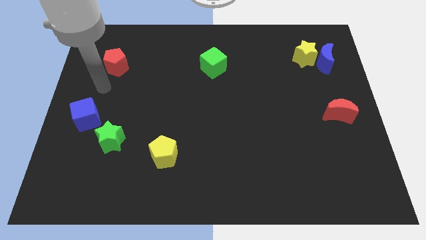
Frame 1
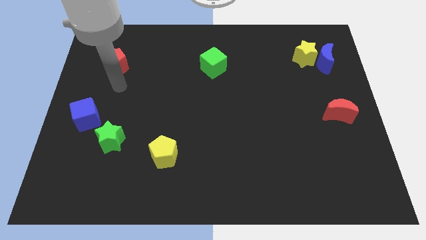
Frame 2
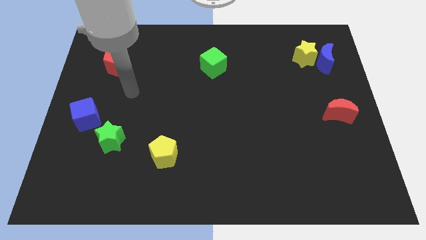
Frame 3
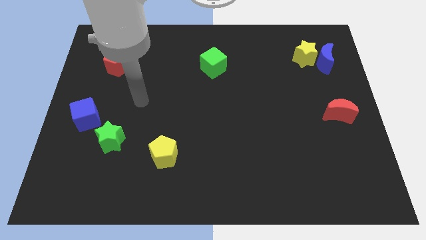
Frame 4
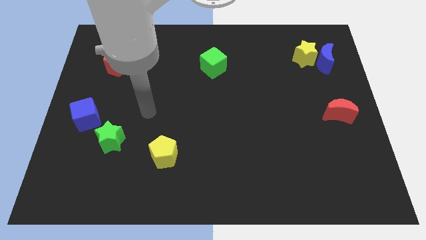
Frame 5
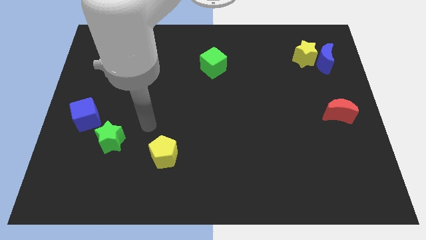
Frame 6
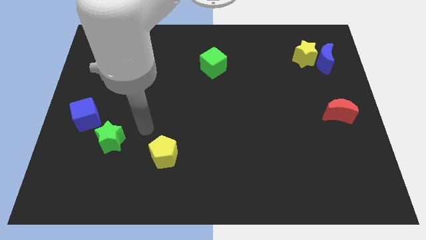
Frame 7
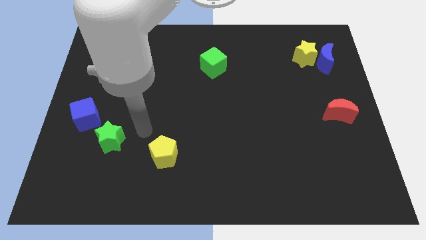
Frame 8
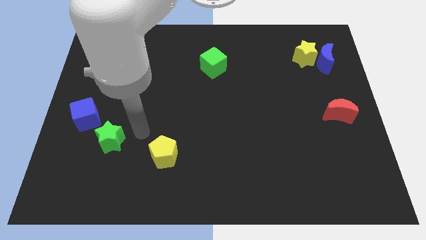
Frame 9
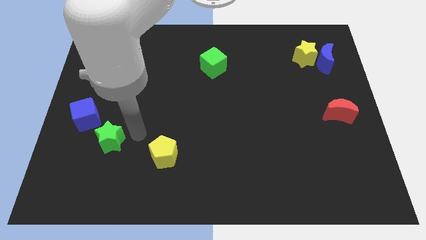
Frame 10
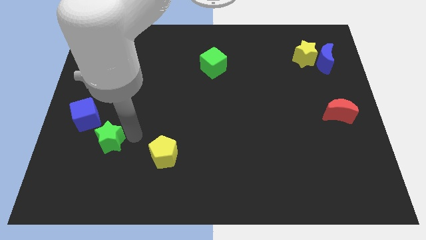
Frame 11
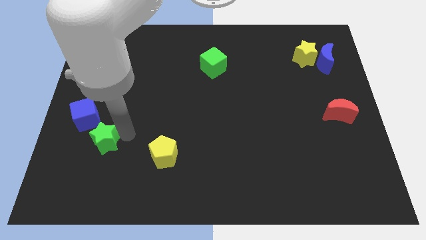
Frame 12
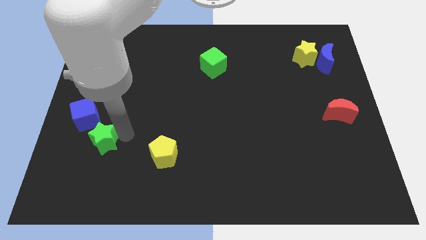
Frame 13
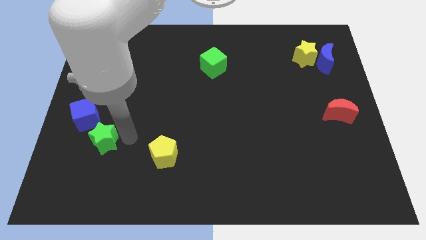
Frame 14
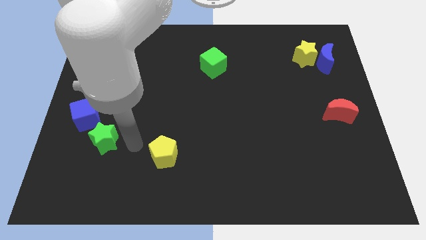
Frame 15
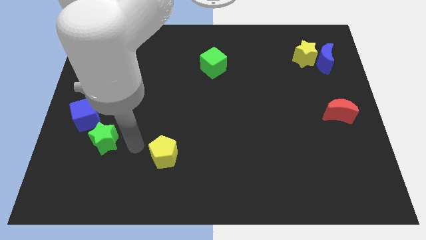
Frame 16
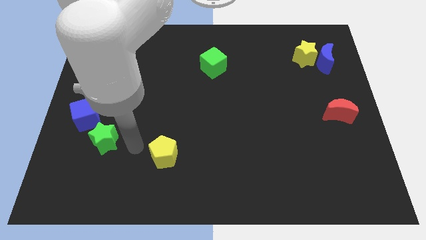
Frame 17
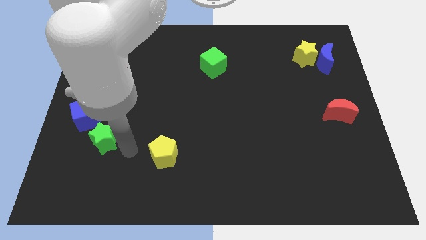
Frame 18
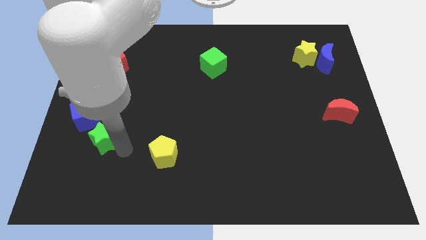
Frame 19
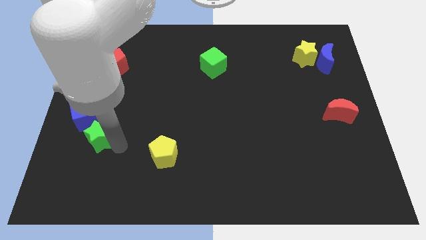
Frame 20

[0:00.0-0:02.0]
slightly push the green star towards the blue cube

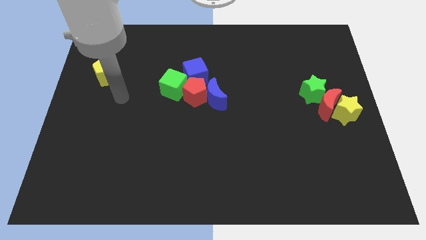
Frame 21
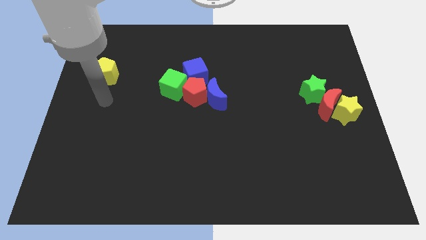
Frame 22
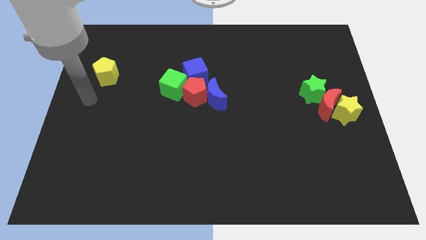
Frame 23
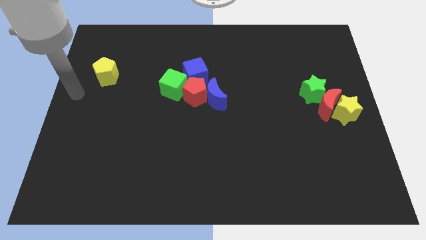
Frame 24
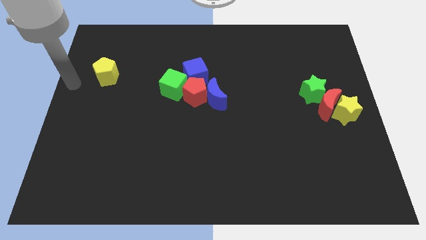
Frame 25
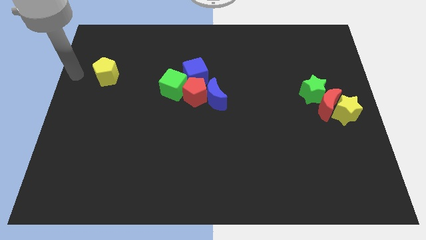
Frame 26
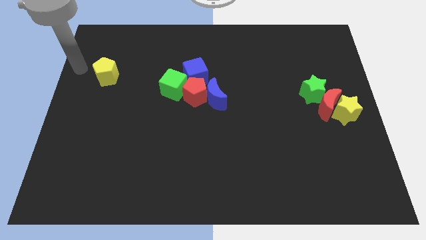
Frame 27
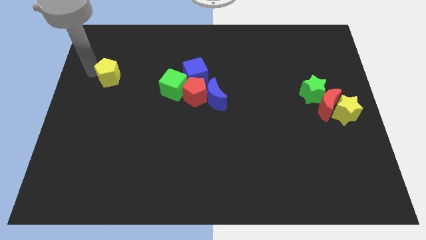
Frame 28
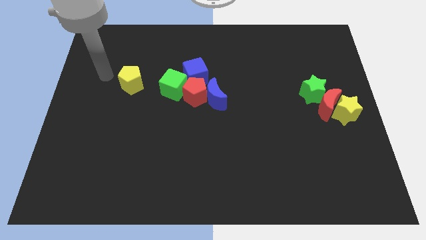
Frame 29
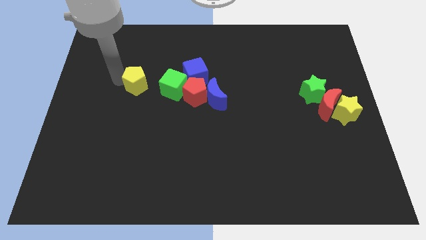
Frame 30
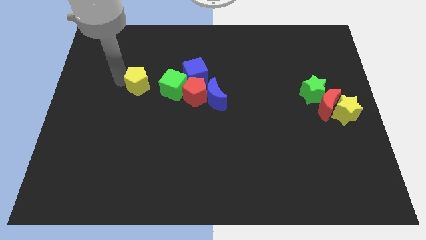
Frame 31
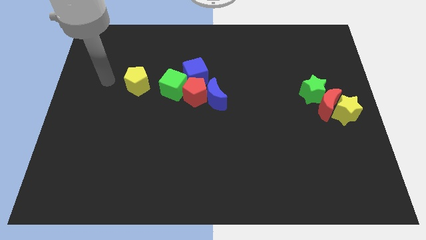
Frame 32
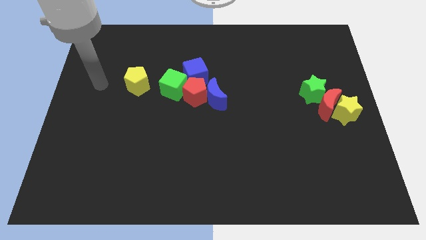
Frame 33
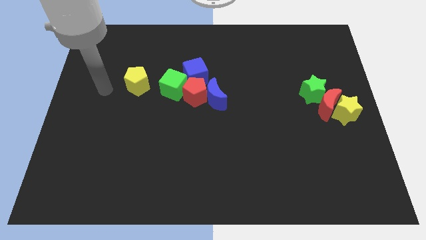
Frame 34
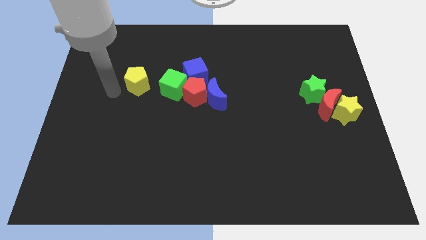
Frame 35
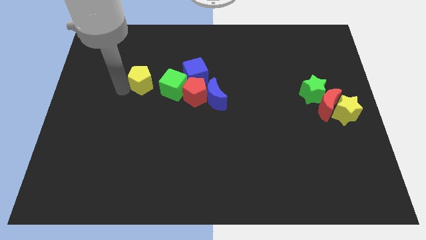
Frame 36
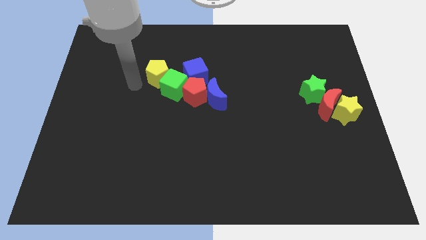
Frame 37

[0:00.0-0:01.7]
push yellow pentagon near green cube

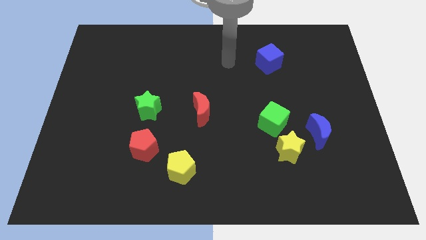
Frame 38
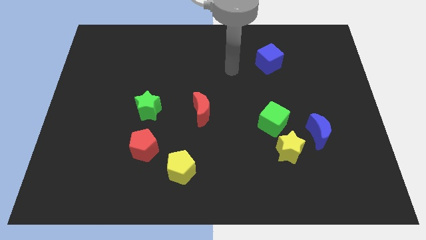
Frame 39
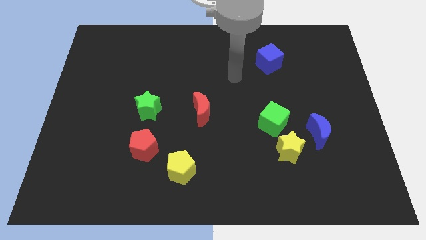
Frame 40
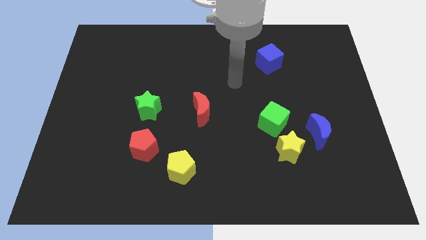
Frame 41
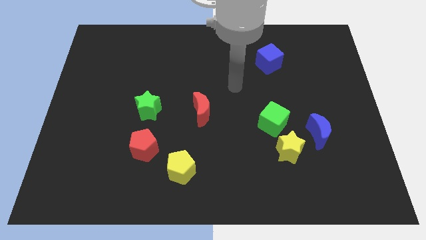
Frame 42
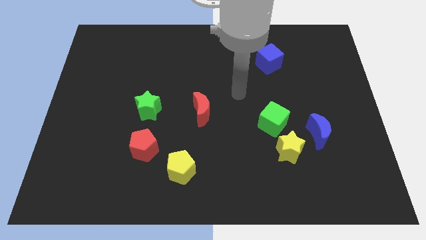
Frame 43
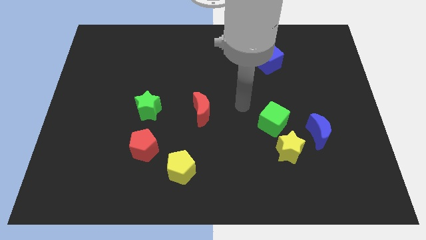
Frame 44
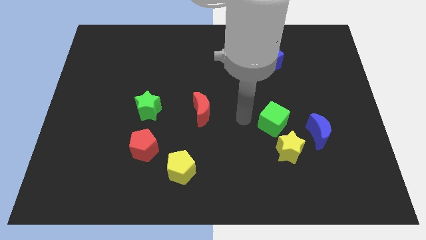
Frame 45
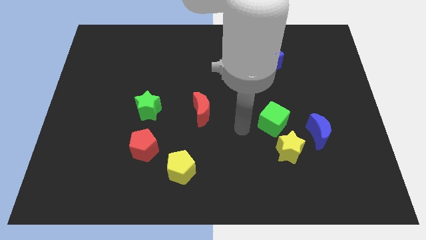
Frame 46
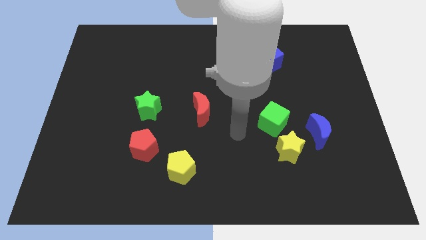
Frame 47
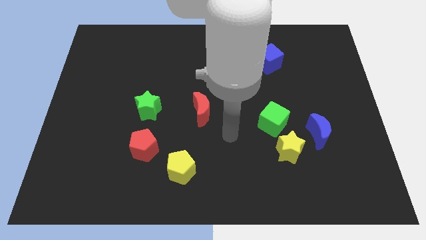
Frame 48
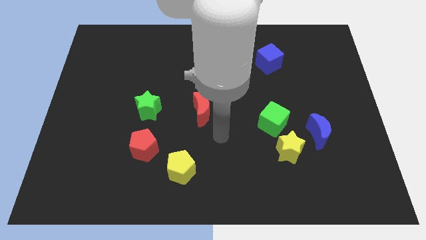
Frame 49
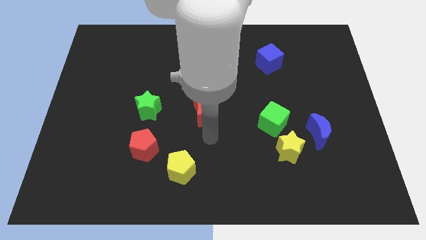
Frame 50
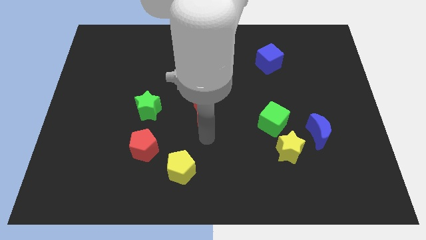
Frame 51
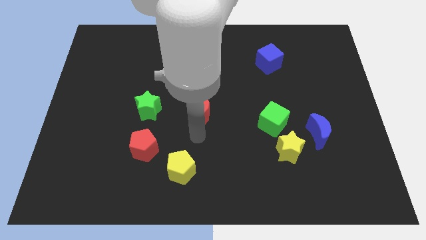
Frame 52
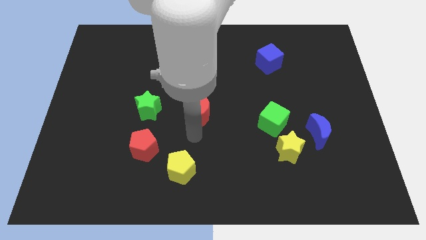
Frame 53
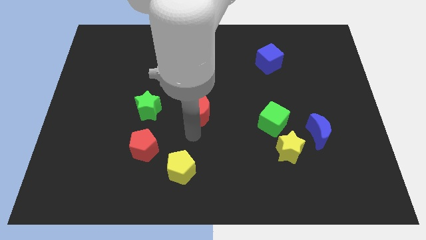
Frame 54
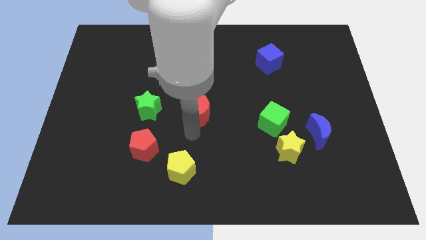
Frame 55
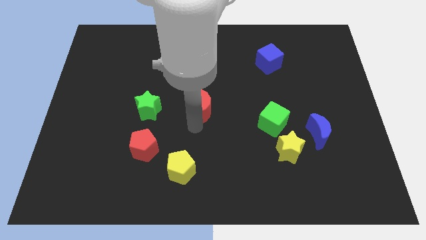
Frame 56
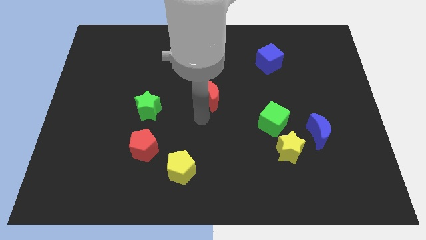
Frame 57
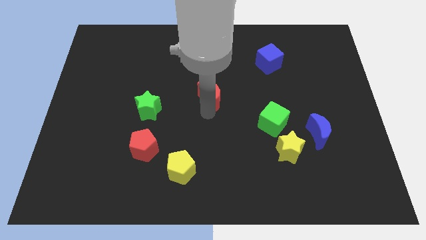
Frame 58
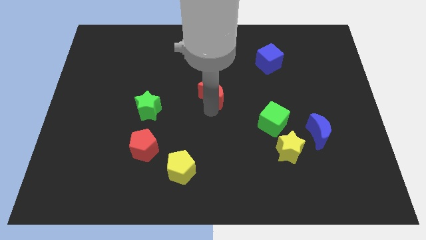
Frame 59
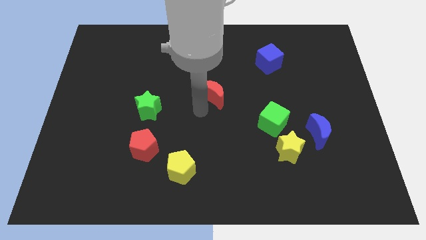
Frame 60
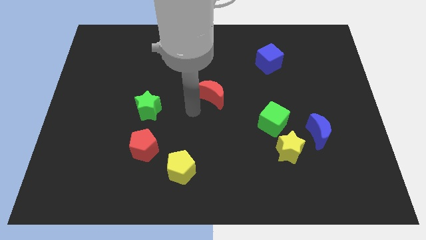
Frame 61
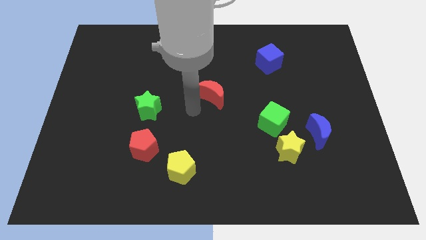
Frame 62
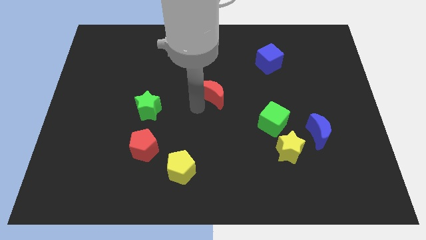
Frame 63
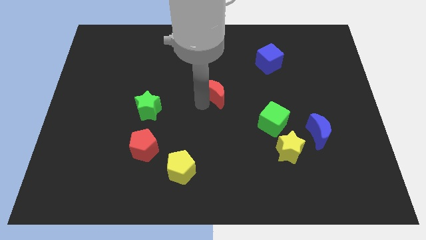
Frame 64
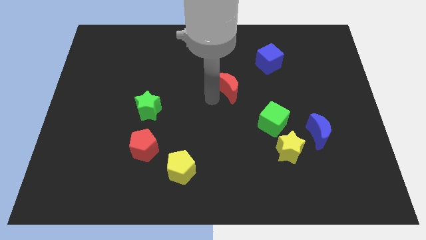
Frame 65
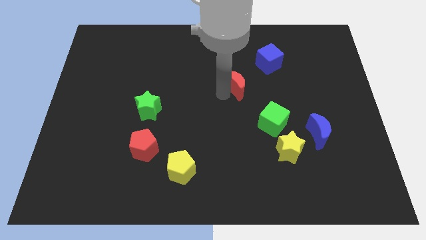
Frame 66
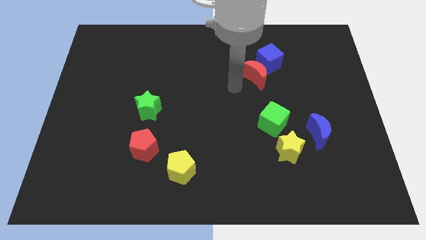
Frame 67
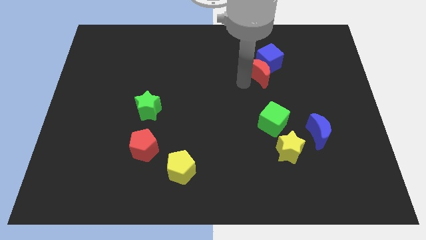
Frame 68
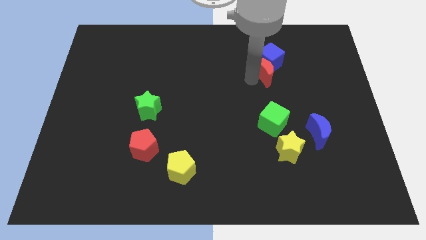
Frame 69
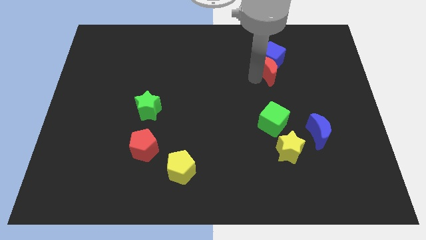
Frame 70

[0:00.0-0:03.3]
push the red moon into the blue moon

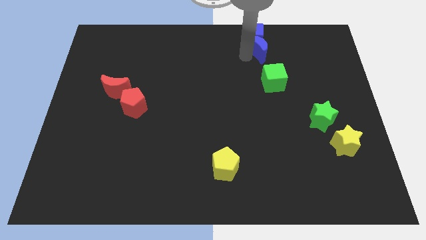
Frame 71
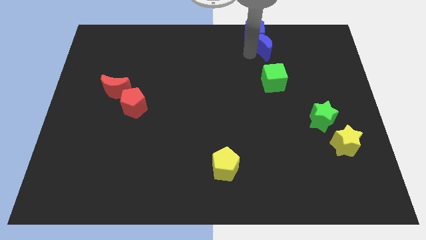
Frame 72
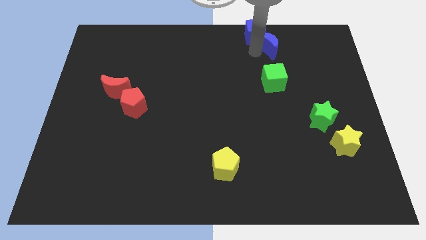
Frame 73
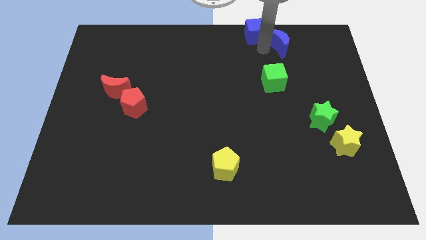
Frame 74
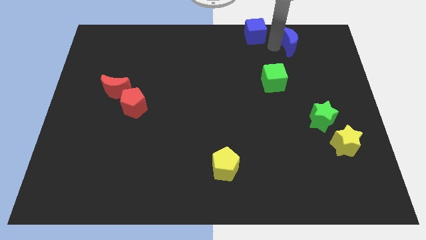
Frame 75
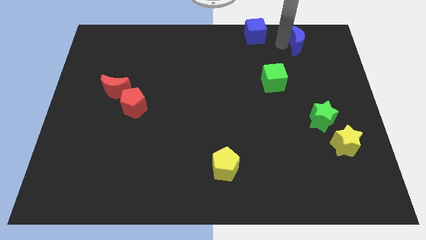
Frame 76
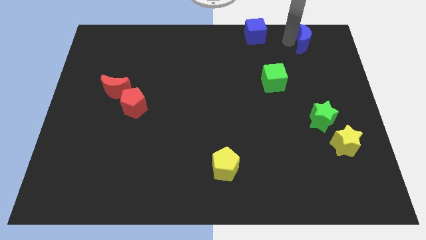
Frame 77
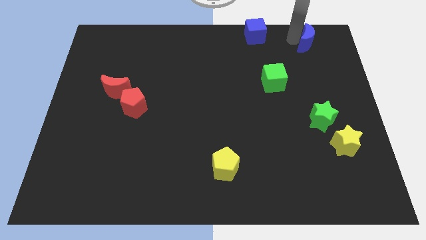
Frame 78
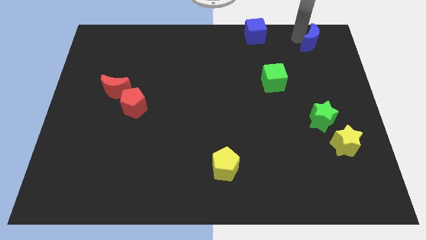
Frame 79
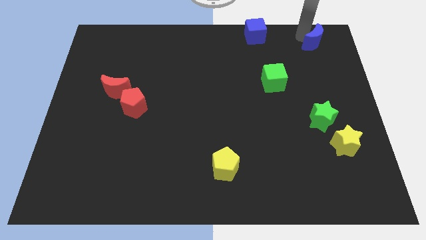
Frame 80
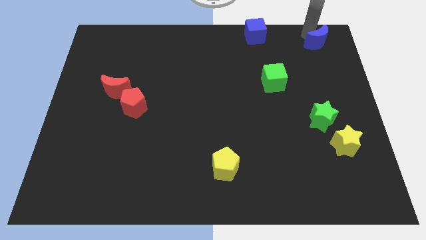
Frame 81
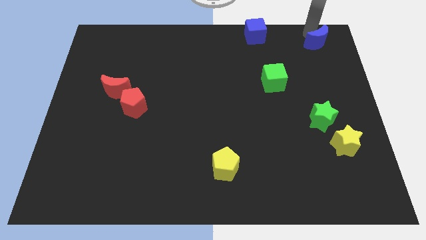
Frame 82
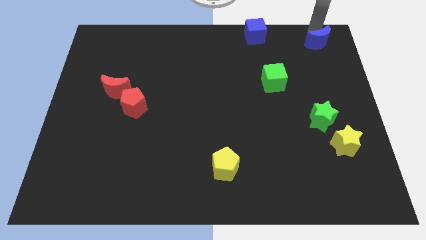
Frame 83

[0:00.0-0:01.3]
separate the blue crescent from the blue cube

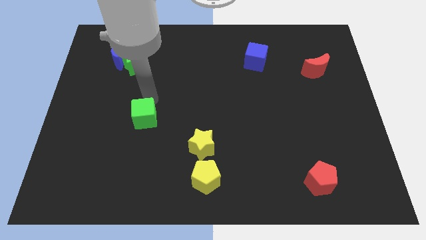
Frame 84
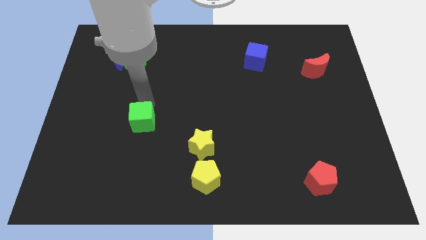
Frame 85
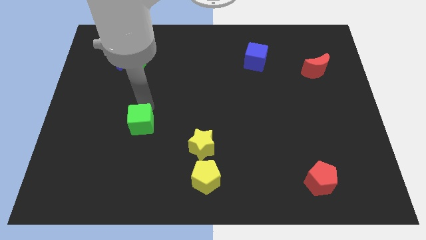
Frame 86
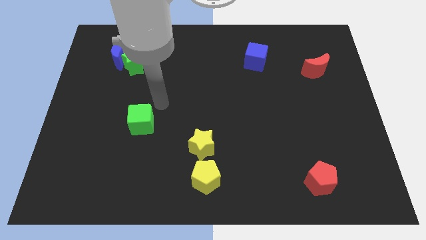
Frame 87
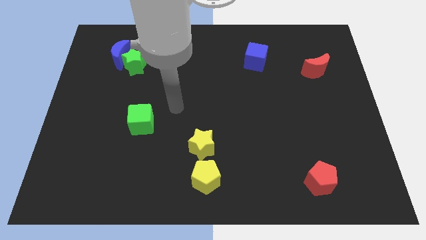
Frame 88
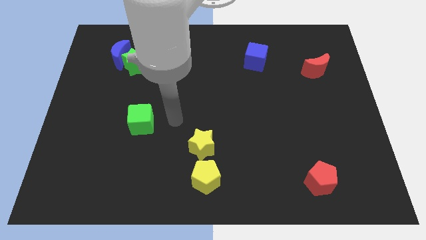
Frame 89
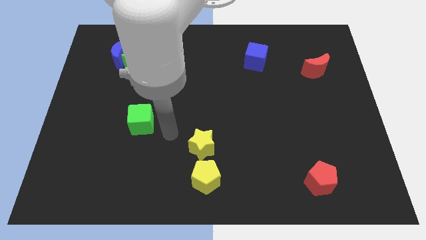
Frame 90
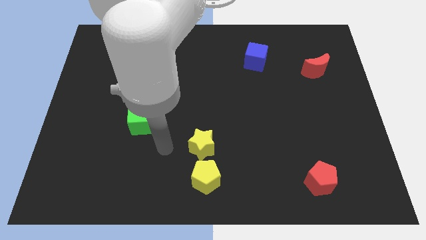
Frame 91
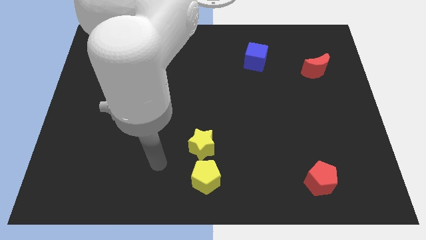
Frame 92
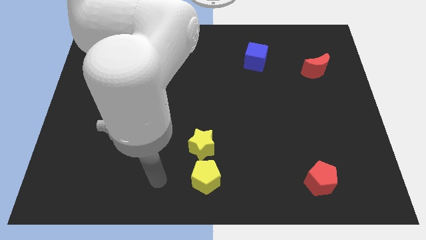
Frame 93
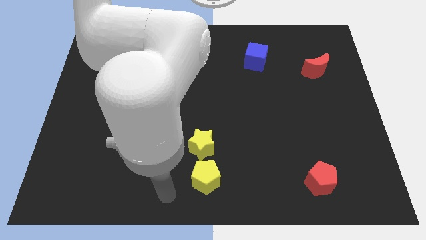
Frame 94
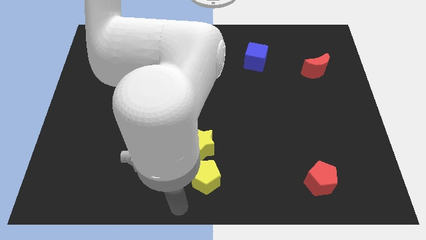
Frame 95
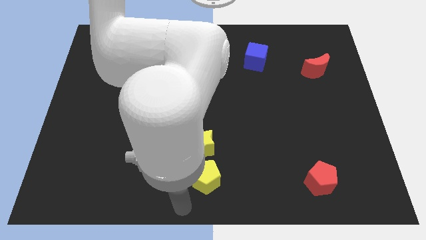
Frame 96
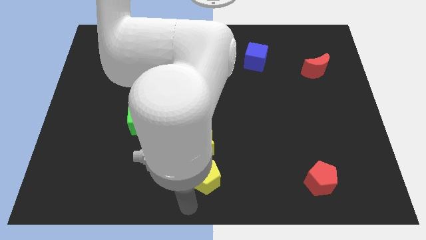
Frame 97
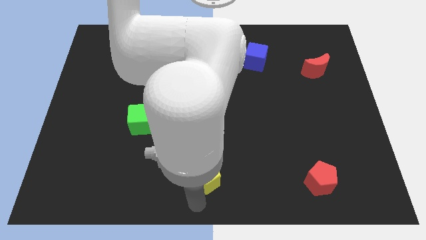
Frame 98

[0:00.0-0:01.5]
move the arm below the yellow pentagon
